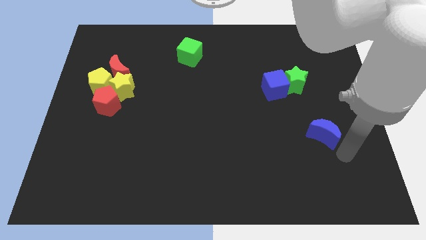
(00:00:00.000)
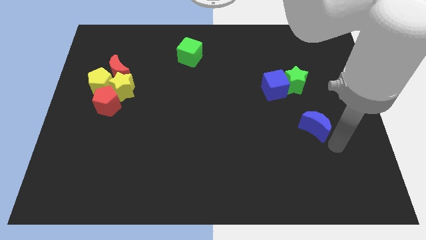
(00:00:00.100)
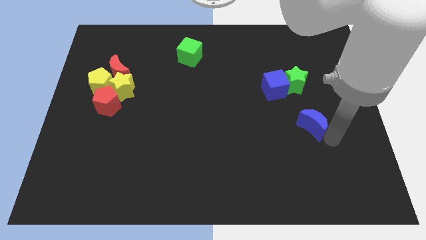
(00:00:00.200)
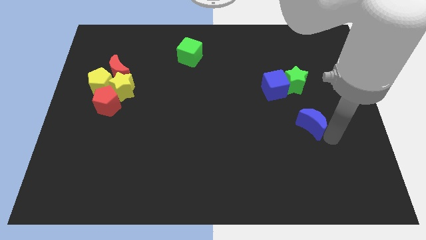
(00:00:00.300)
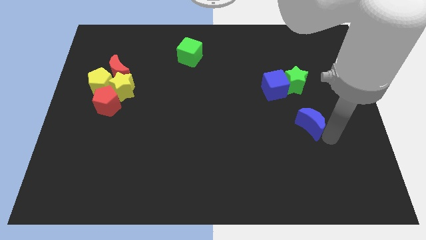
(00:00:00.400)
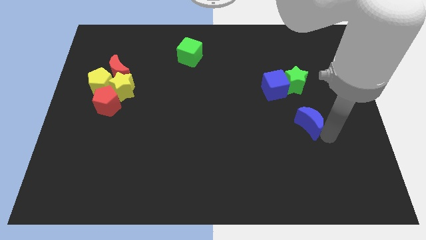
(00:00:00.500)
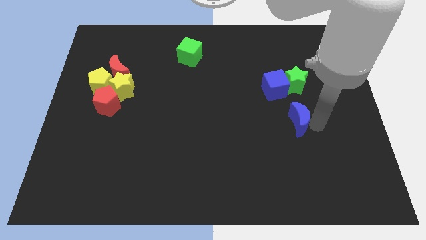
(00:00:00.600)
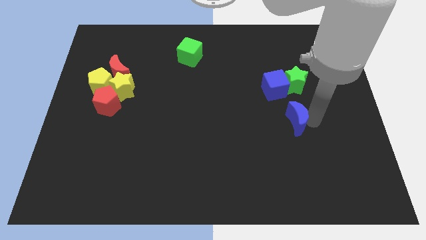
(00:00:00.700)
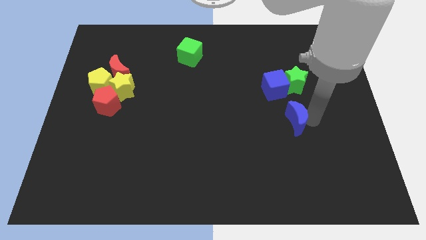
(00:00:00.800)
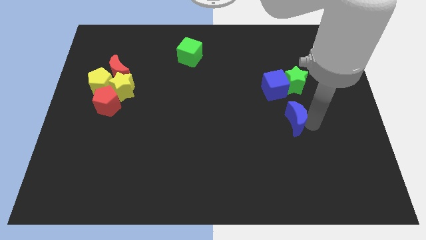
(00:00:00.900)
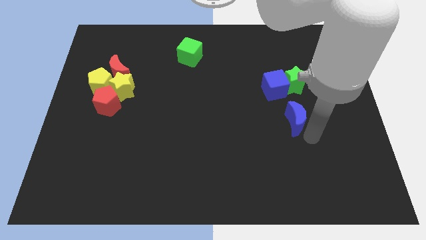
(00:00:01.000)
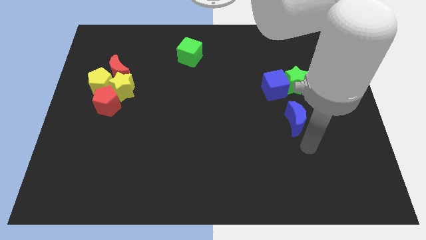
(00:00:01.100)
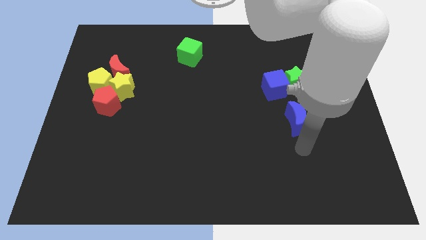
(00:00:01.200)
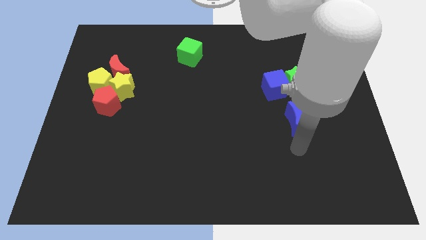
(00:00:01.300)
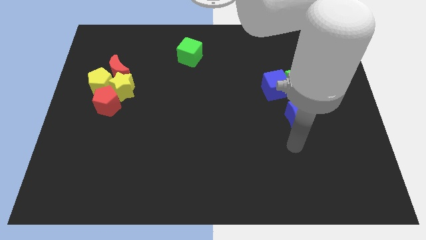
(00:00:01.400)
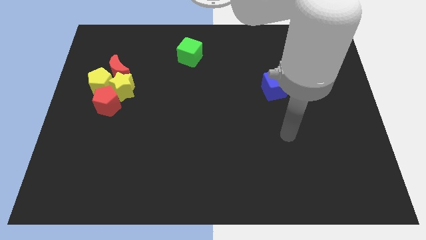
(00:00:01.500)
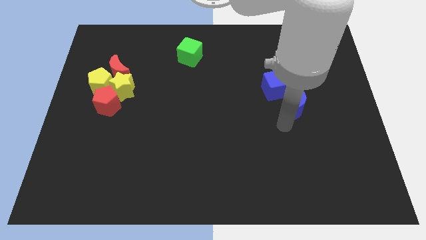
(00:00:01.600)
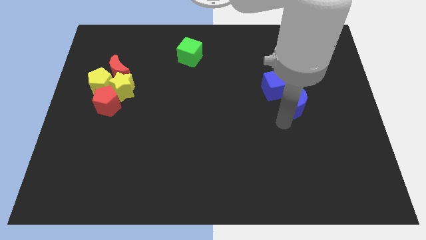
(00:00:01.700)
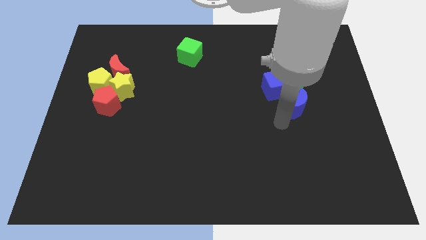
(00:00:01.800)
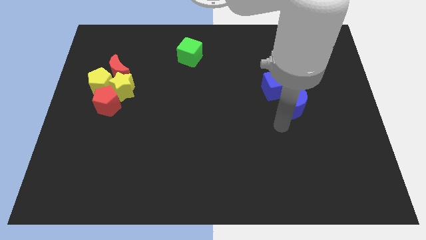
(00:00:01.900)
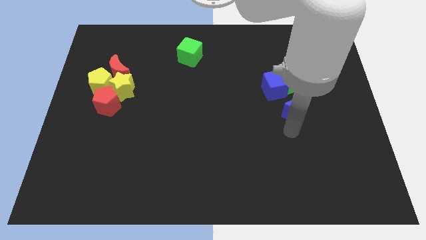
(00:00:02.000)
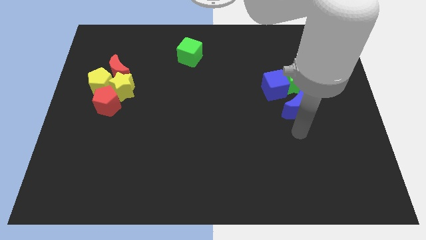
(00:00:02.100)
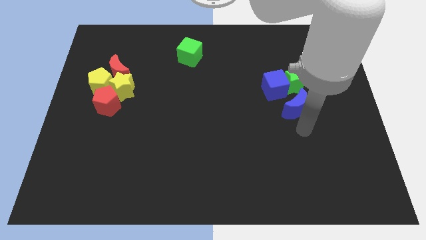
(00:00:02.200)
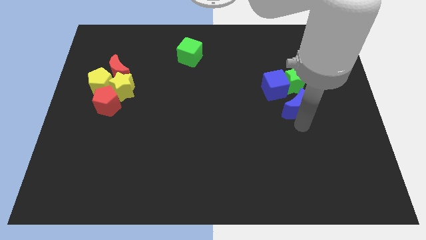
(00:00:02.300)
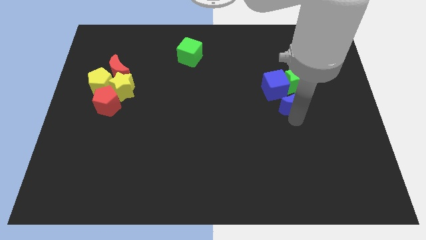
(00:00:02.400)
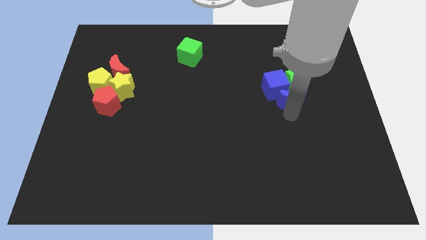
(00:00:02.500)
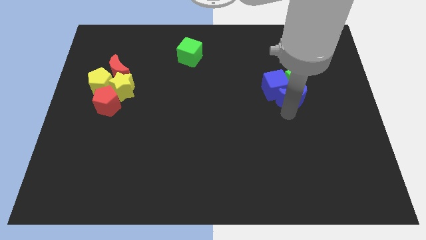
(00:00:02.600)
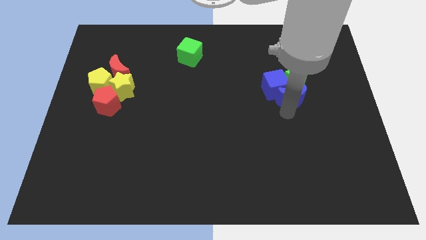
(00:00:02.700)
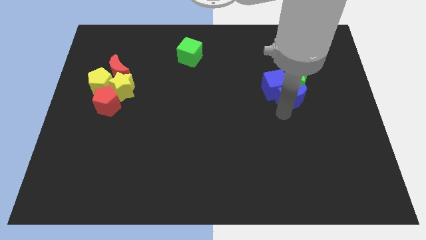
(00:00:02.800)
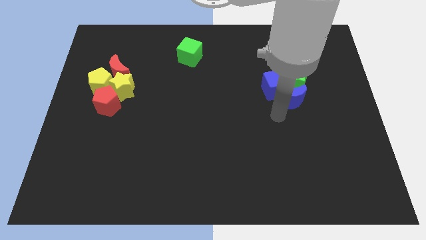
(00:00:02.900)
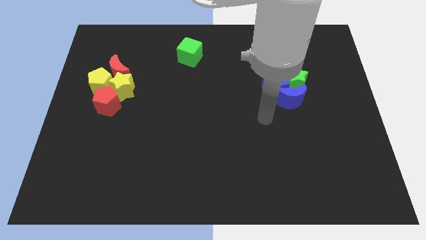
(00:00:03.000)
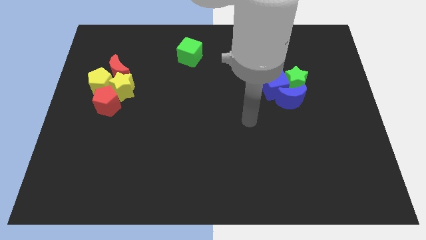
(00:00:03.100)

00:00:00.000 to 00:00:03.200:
place the blue crescent to the bottom of the blue cube and green star

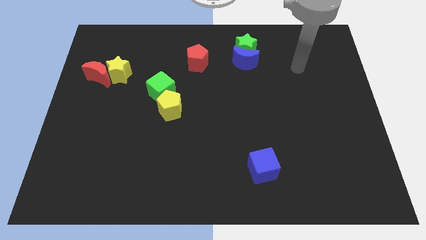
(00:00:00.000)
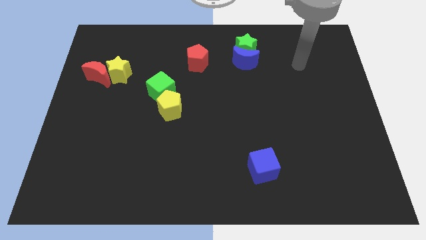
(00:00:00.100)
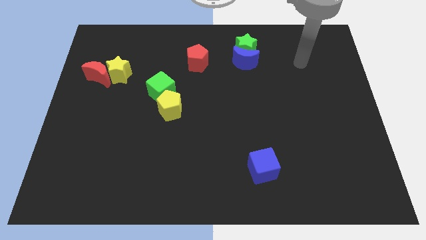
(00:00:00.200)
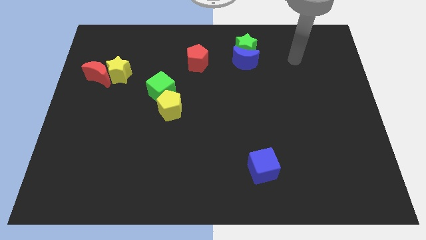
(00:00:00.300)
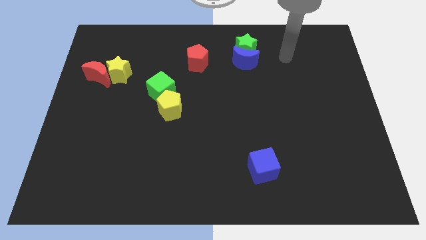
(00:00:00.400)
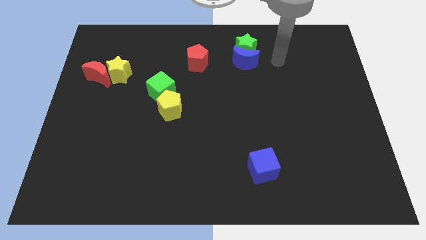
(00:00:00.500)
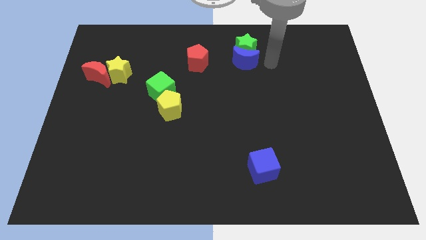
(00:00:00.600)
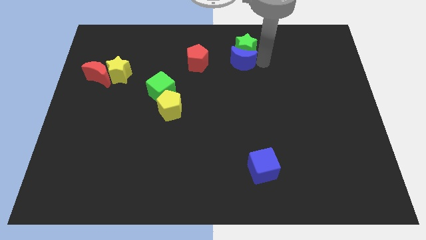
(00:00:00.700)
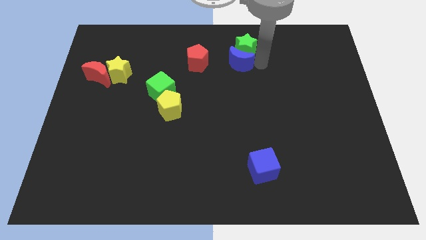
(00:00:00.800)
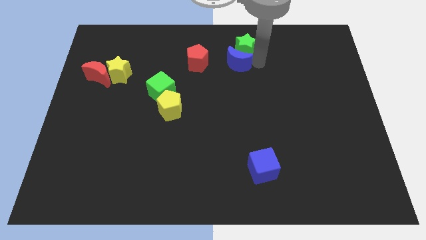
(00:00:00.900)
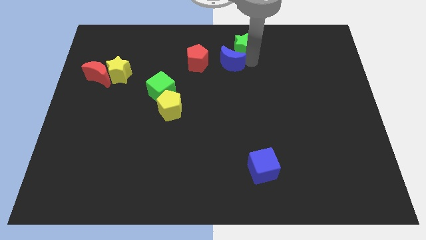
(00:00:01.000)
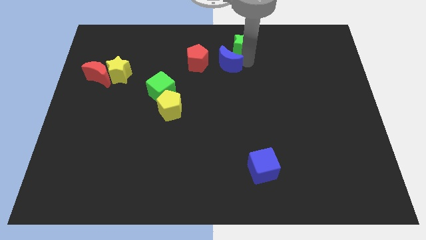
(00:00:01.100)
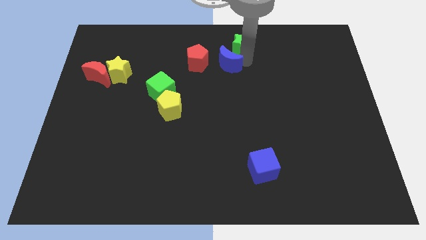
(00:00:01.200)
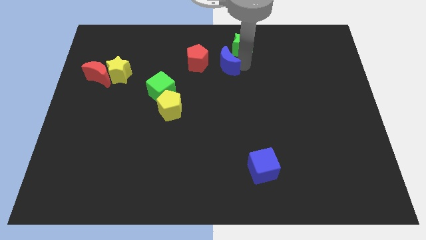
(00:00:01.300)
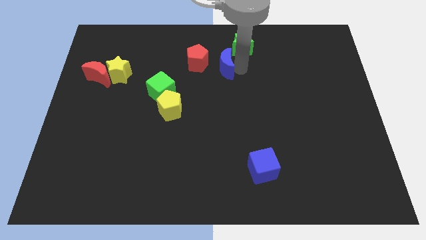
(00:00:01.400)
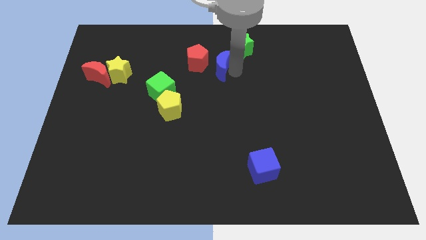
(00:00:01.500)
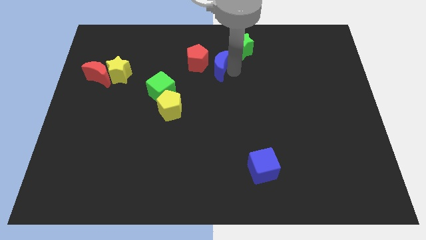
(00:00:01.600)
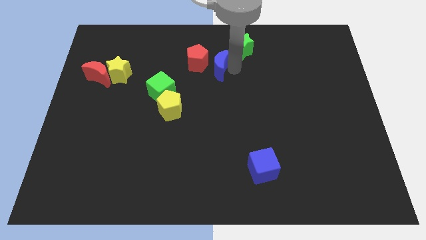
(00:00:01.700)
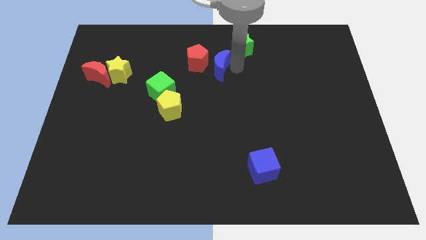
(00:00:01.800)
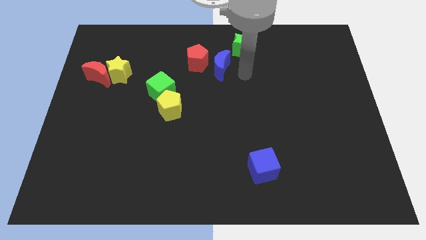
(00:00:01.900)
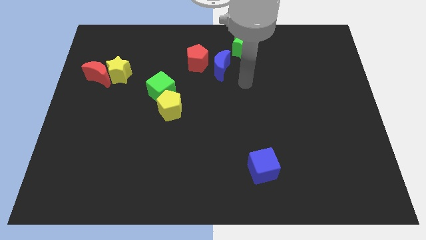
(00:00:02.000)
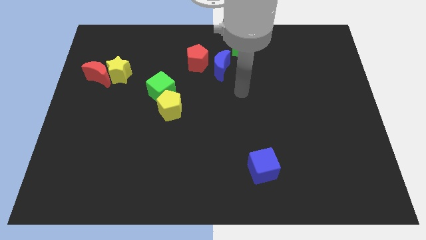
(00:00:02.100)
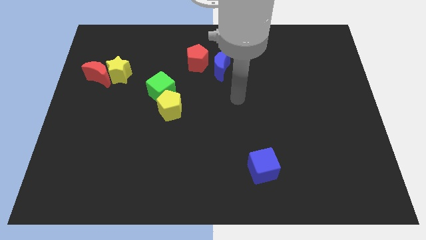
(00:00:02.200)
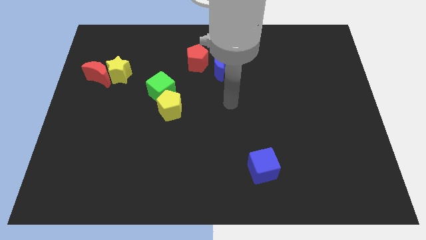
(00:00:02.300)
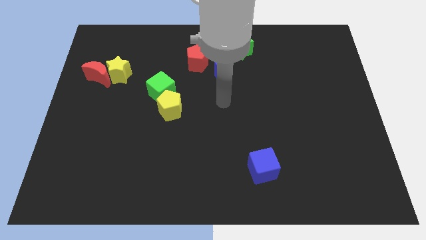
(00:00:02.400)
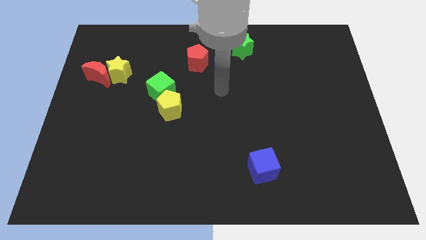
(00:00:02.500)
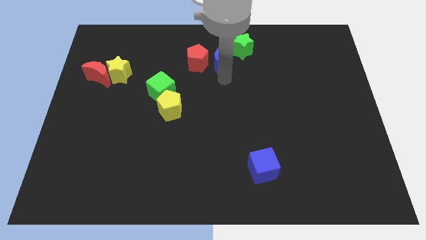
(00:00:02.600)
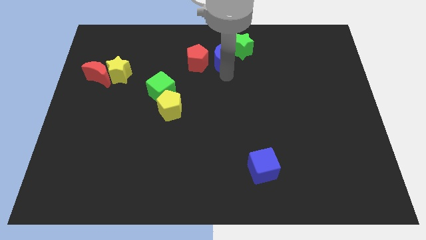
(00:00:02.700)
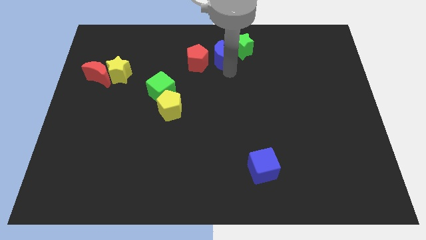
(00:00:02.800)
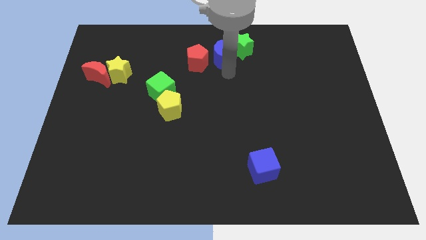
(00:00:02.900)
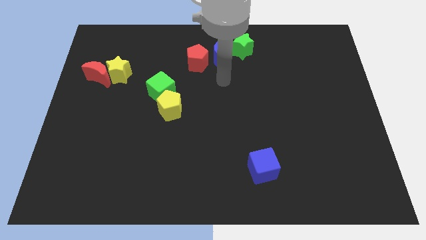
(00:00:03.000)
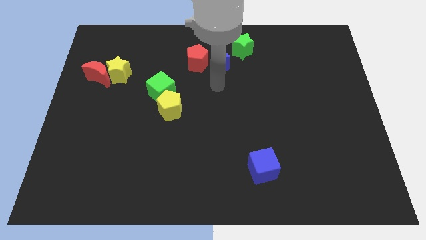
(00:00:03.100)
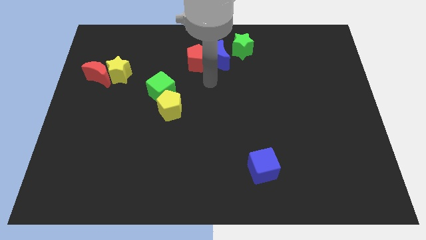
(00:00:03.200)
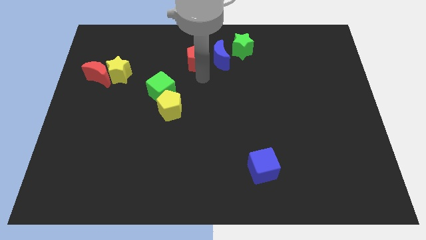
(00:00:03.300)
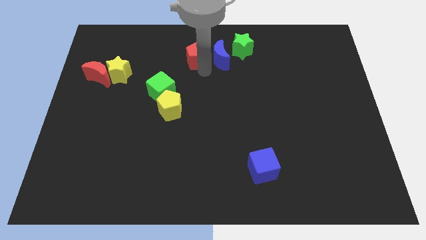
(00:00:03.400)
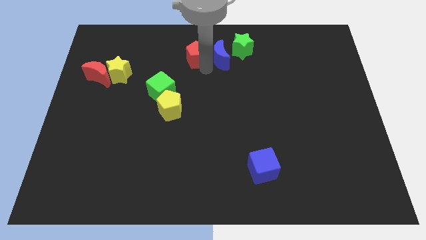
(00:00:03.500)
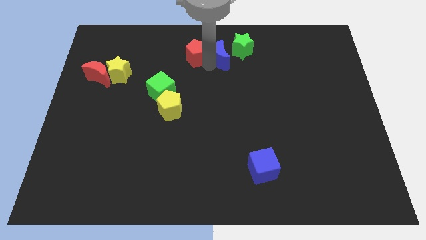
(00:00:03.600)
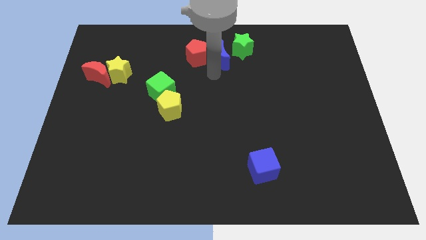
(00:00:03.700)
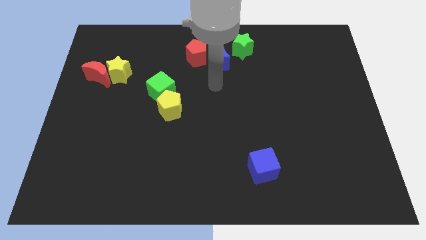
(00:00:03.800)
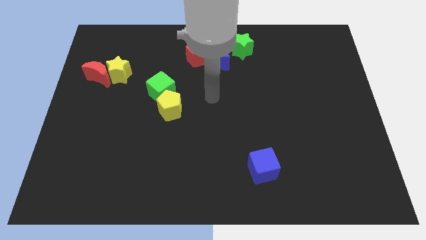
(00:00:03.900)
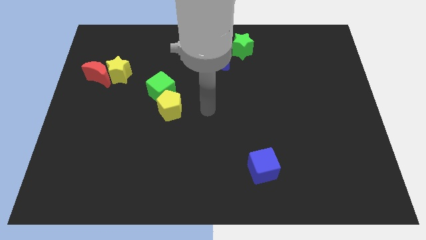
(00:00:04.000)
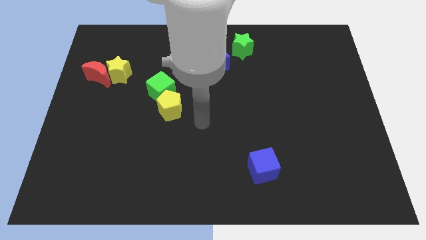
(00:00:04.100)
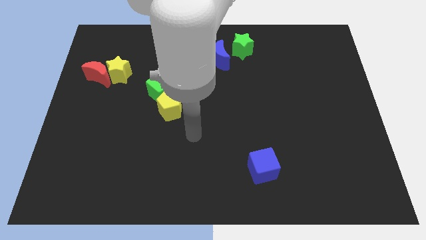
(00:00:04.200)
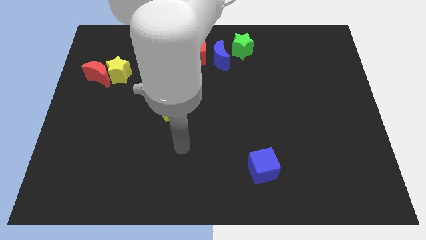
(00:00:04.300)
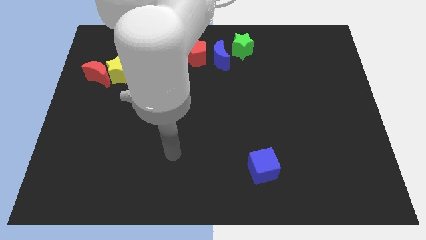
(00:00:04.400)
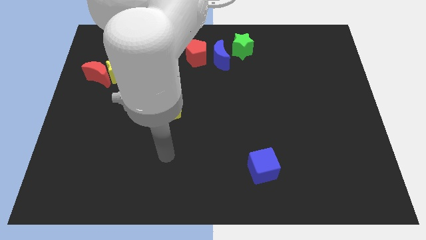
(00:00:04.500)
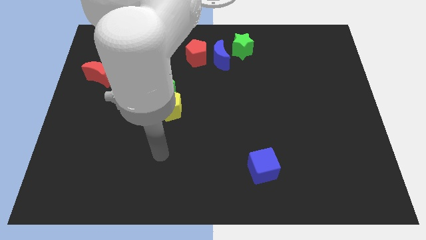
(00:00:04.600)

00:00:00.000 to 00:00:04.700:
slightly touch down to the red pentagon

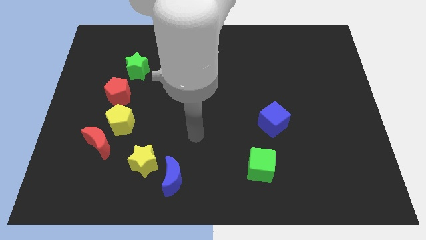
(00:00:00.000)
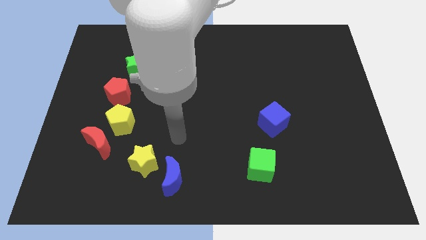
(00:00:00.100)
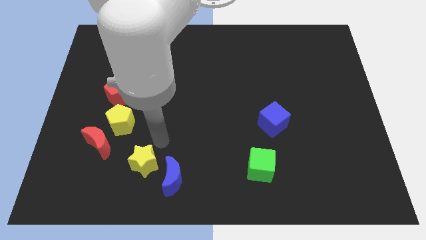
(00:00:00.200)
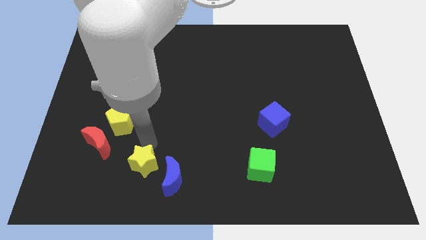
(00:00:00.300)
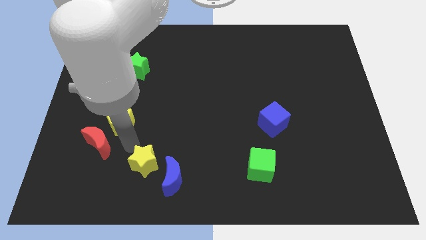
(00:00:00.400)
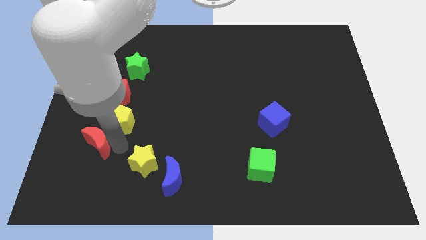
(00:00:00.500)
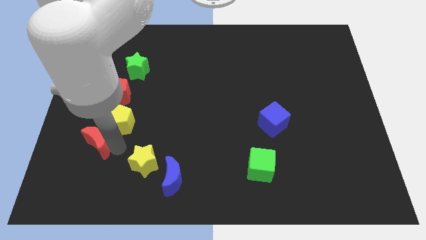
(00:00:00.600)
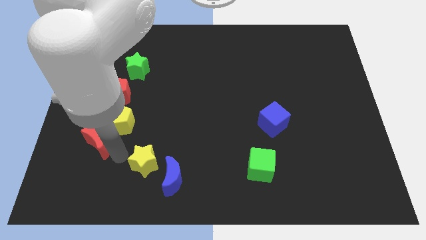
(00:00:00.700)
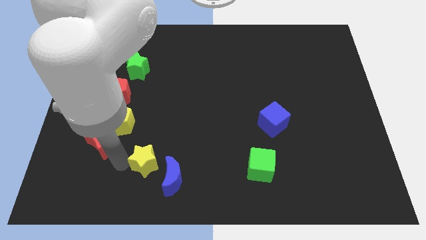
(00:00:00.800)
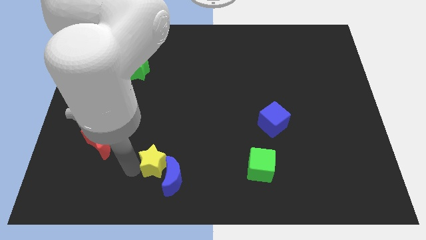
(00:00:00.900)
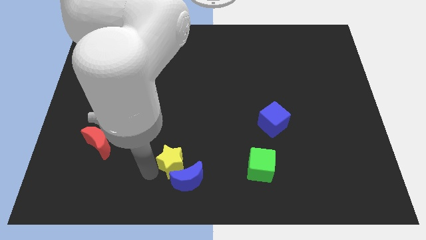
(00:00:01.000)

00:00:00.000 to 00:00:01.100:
push the yellow star into the blue moon
